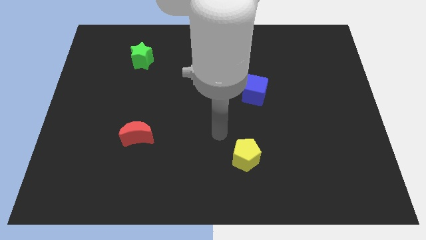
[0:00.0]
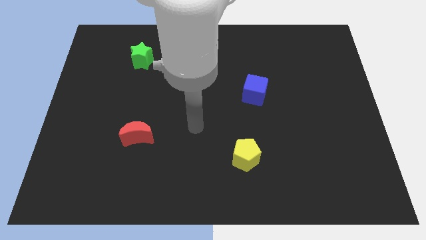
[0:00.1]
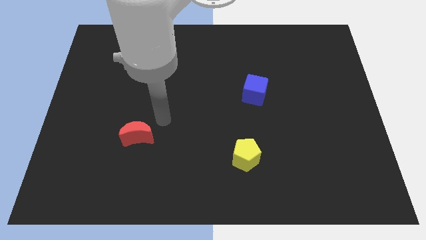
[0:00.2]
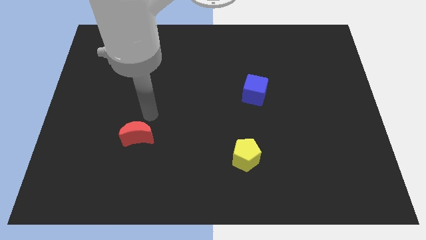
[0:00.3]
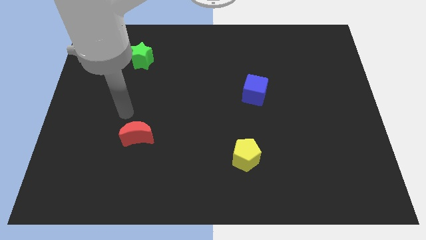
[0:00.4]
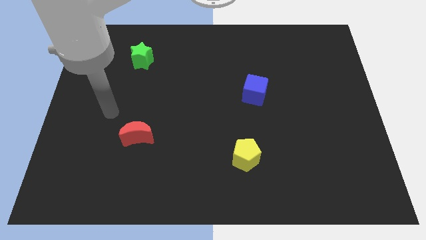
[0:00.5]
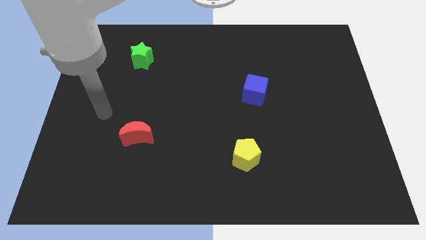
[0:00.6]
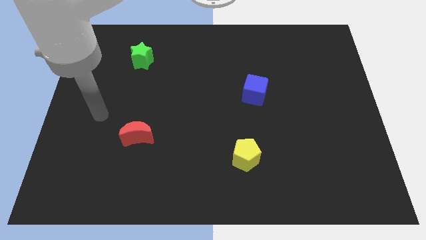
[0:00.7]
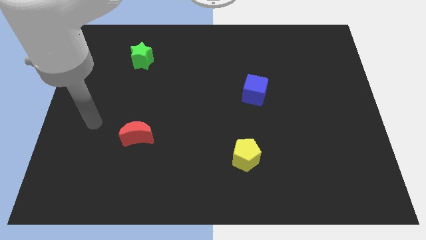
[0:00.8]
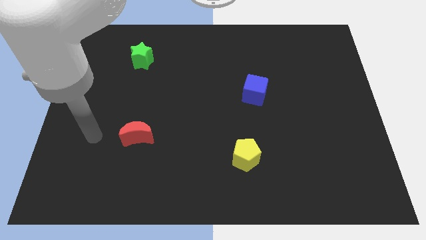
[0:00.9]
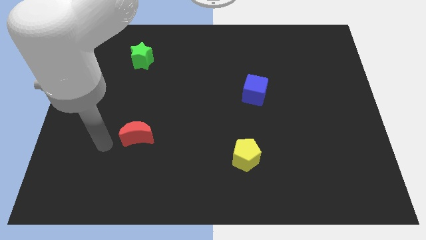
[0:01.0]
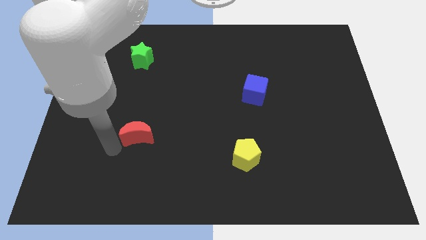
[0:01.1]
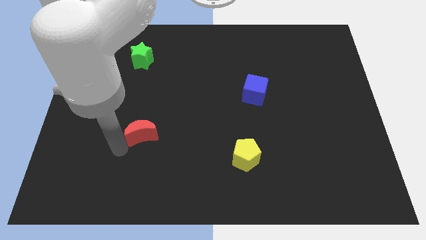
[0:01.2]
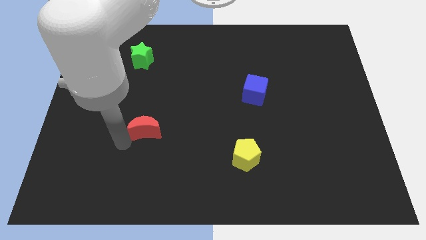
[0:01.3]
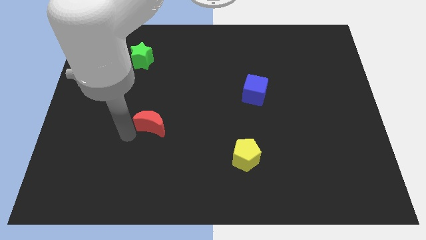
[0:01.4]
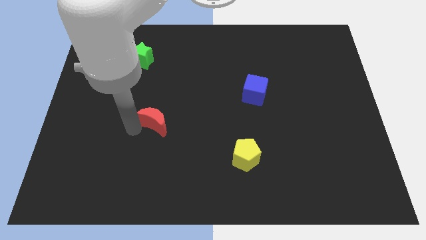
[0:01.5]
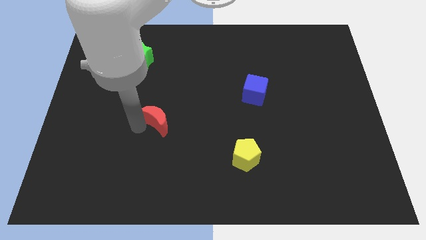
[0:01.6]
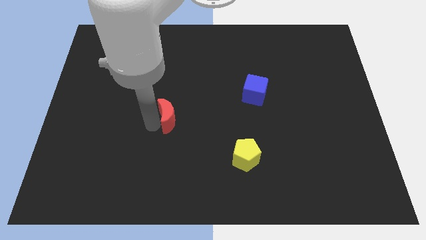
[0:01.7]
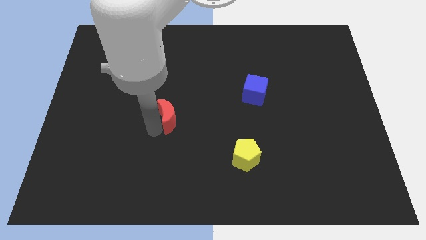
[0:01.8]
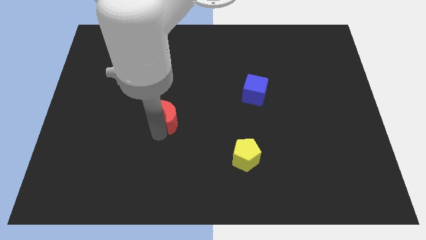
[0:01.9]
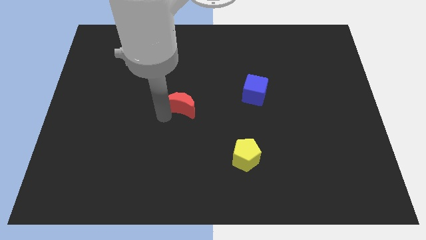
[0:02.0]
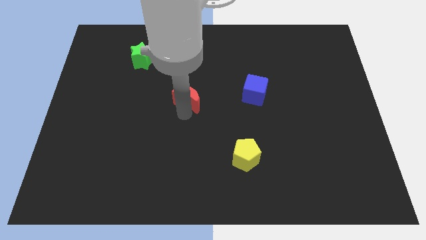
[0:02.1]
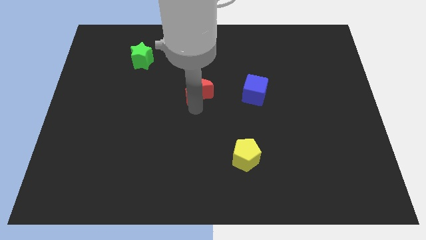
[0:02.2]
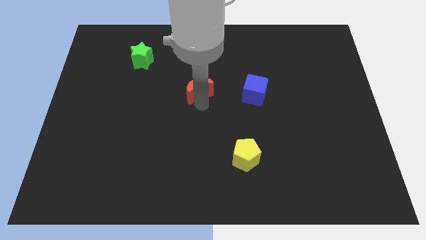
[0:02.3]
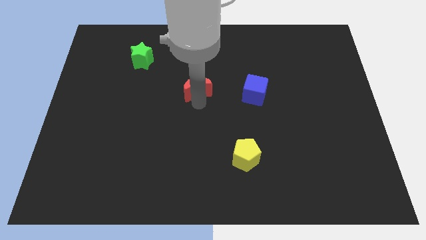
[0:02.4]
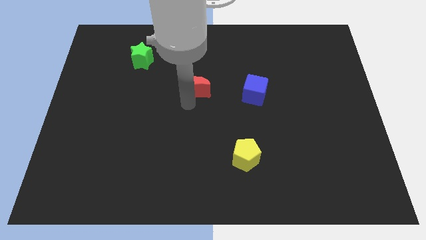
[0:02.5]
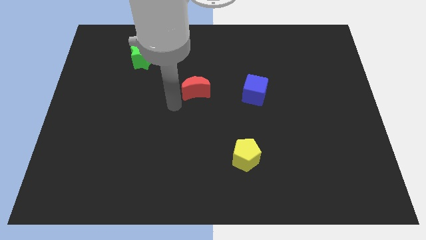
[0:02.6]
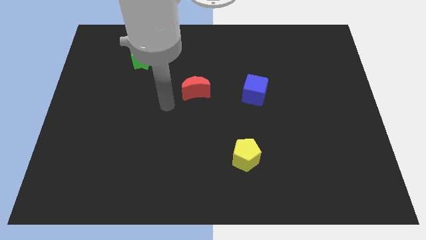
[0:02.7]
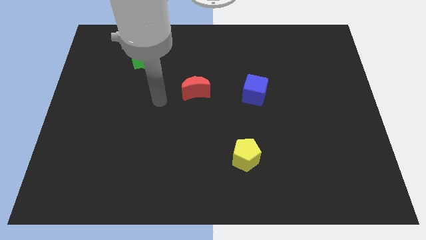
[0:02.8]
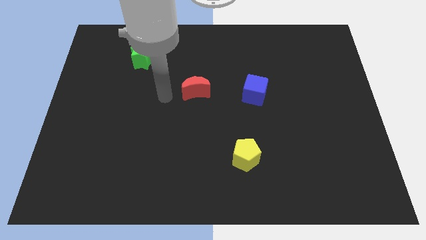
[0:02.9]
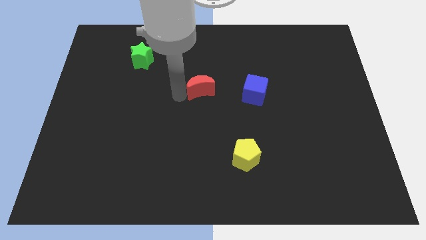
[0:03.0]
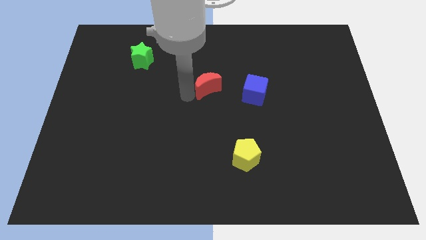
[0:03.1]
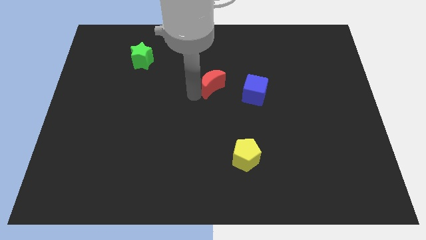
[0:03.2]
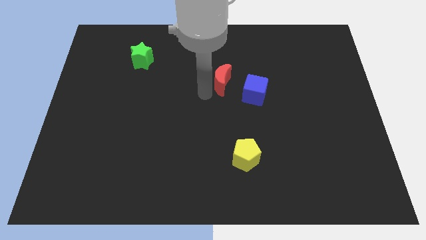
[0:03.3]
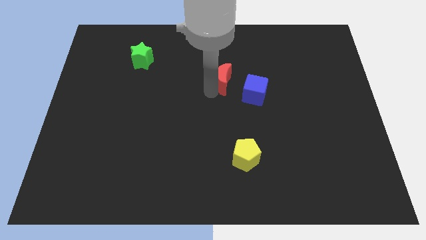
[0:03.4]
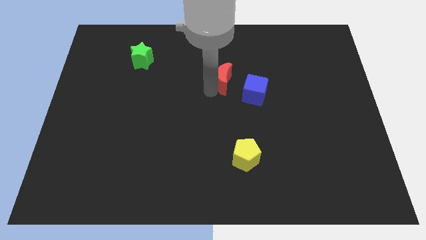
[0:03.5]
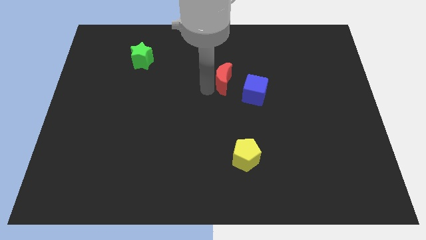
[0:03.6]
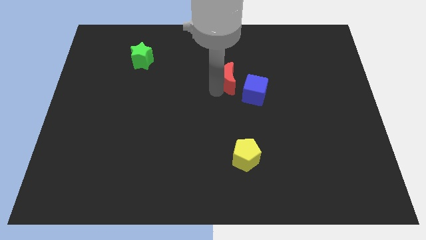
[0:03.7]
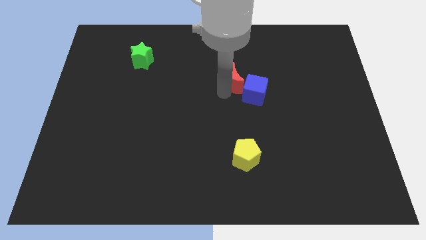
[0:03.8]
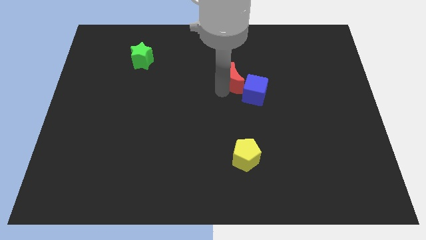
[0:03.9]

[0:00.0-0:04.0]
push the moon close to the blue block

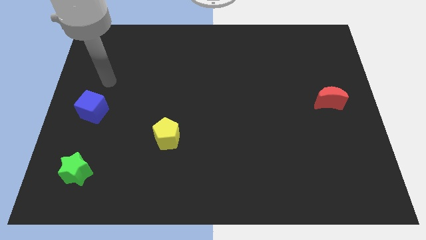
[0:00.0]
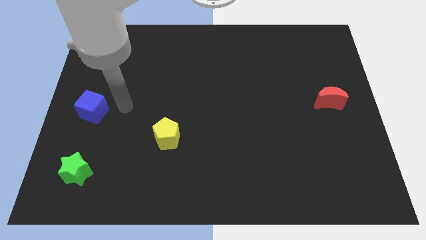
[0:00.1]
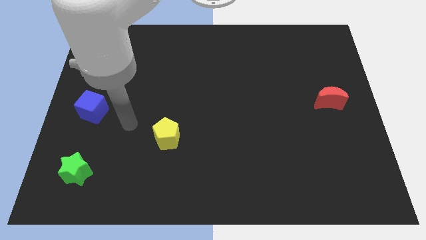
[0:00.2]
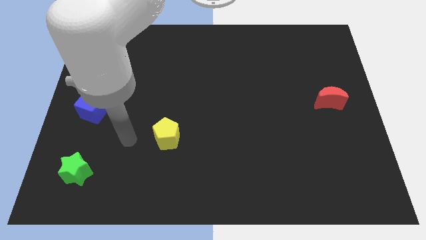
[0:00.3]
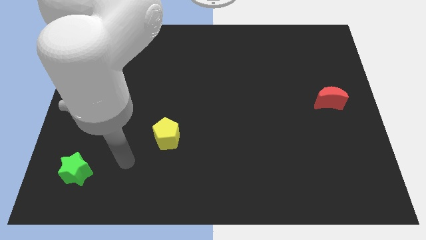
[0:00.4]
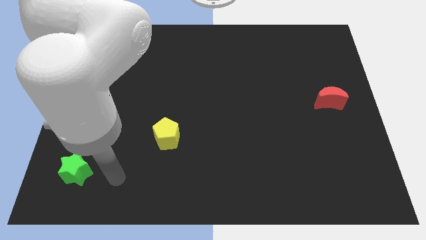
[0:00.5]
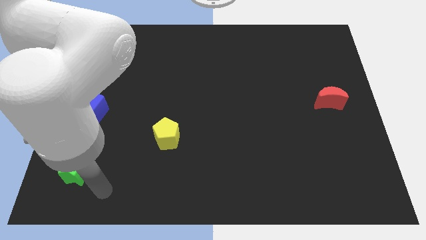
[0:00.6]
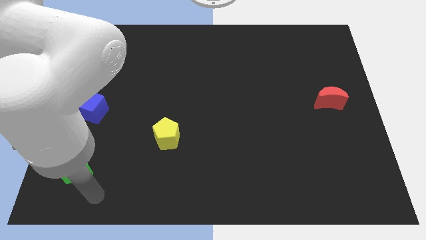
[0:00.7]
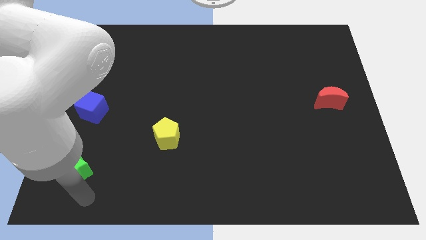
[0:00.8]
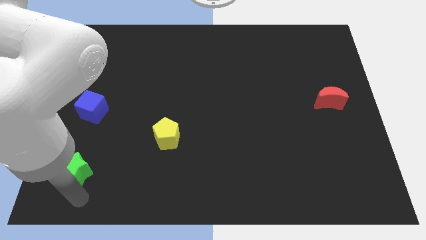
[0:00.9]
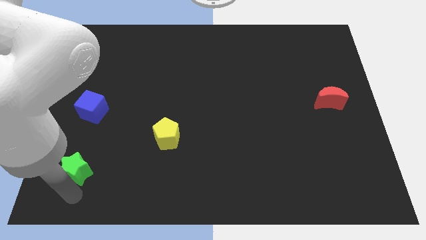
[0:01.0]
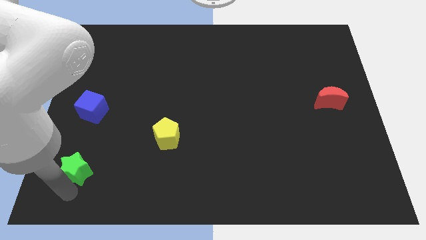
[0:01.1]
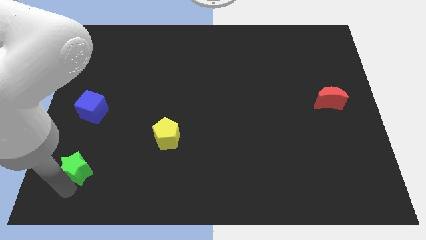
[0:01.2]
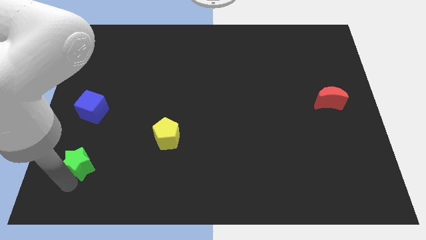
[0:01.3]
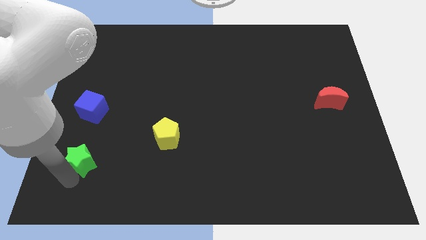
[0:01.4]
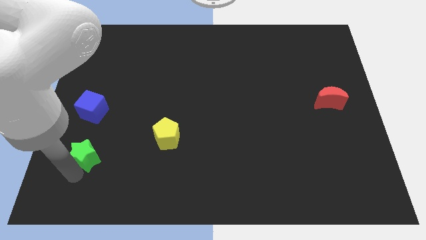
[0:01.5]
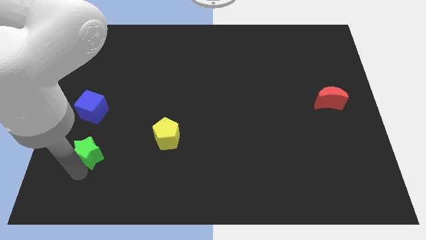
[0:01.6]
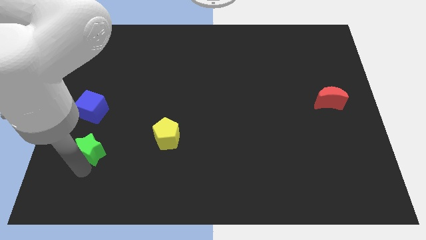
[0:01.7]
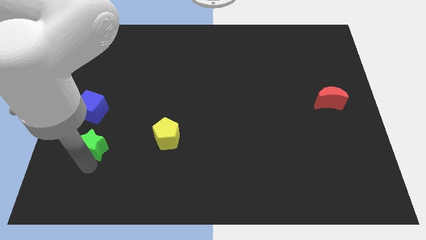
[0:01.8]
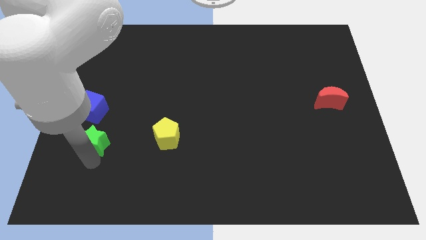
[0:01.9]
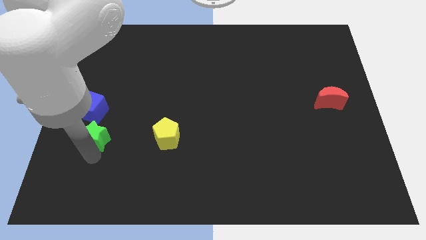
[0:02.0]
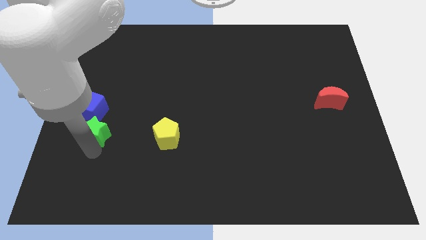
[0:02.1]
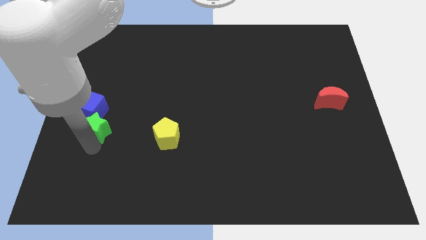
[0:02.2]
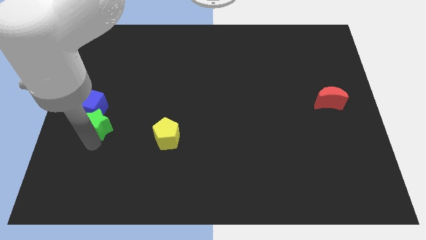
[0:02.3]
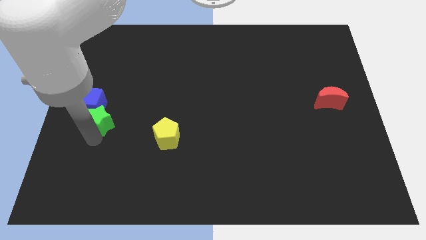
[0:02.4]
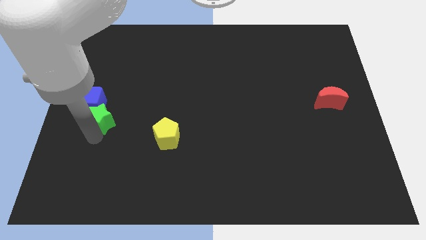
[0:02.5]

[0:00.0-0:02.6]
move the star next to the blue cube

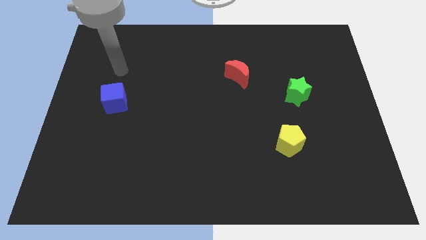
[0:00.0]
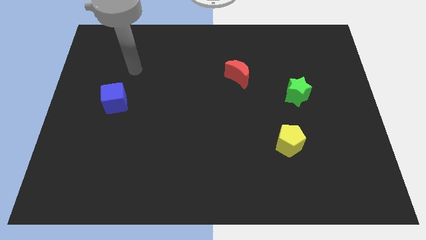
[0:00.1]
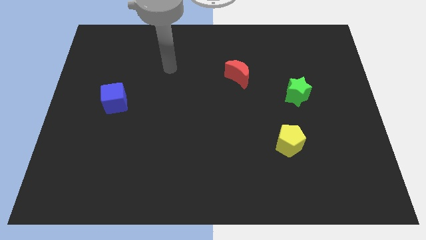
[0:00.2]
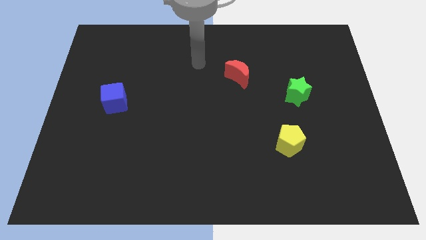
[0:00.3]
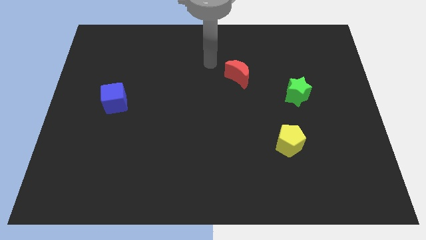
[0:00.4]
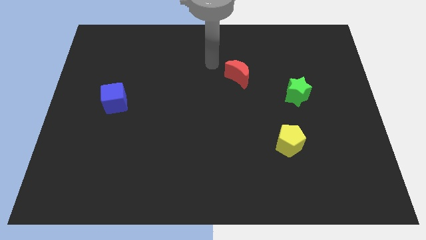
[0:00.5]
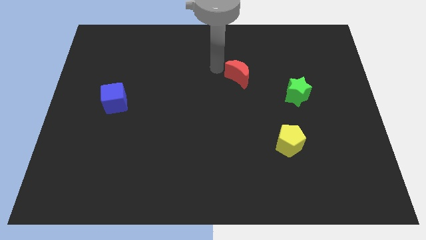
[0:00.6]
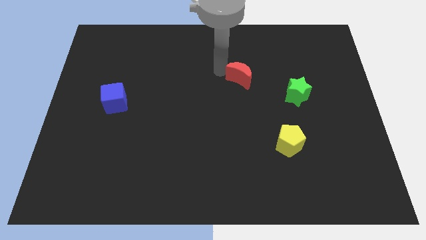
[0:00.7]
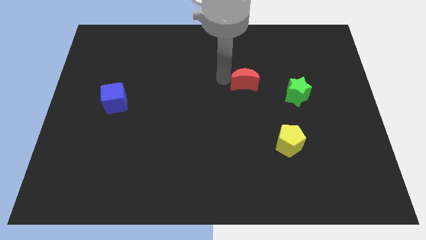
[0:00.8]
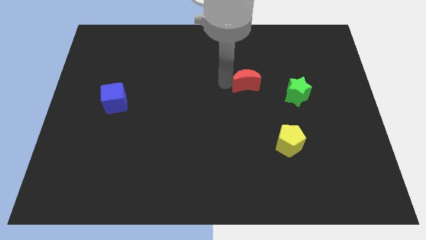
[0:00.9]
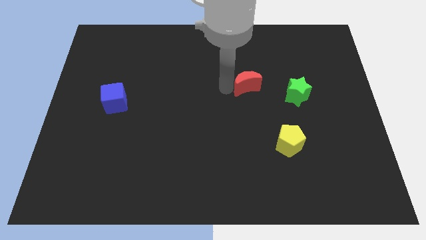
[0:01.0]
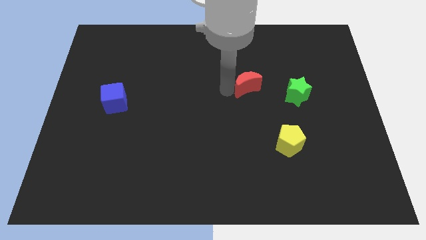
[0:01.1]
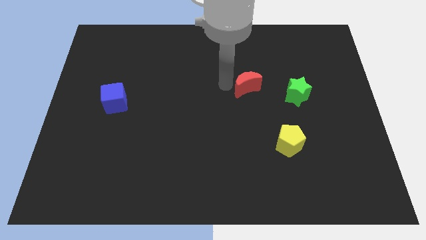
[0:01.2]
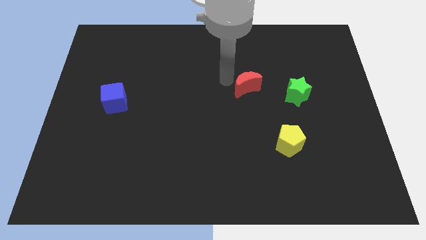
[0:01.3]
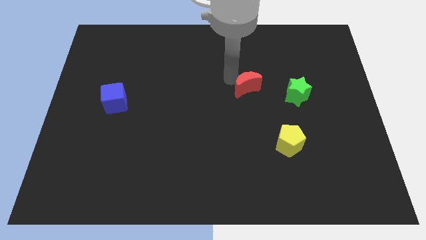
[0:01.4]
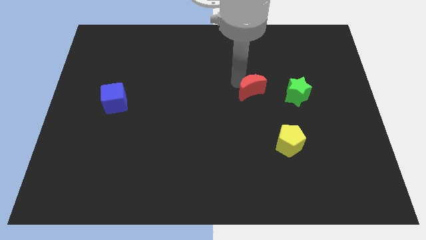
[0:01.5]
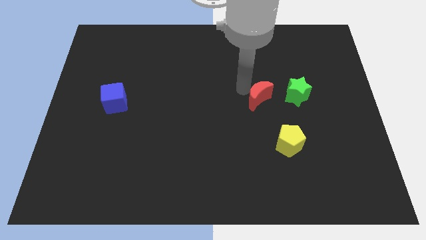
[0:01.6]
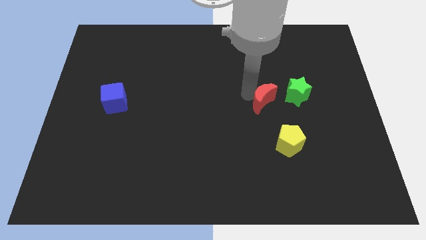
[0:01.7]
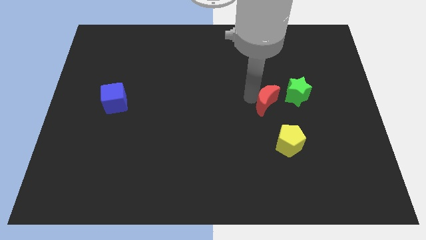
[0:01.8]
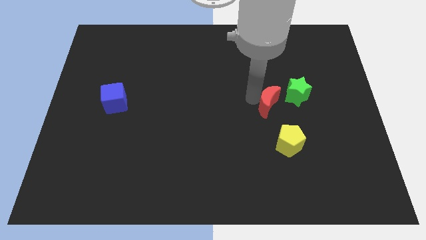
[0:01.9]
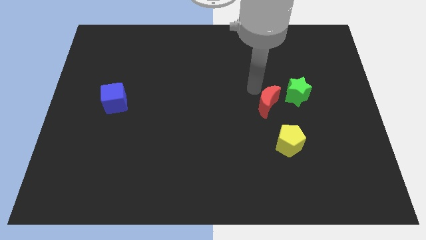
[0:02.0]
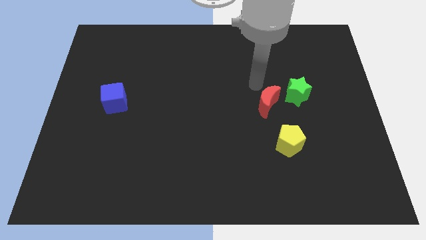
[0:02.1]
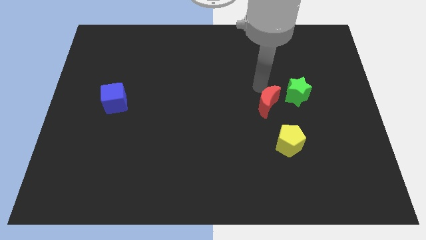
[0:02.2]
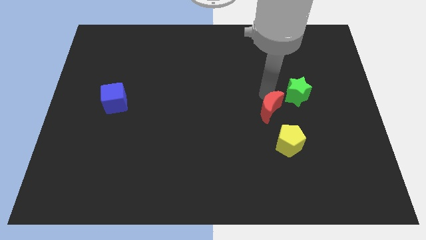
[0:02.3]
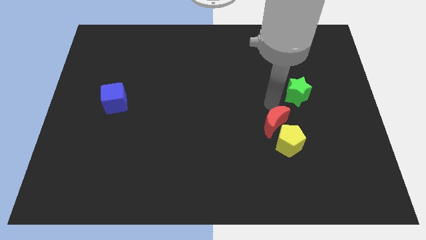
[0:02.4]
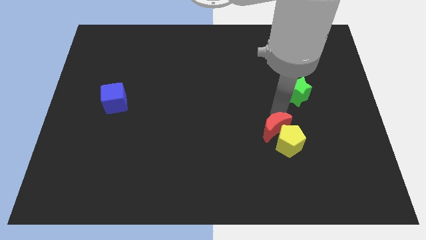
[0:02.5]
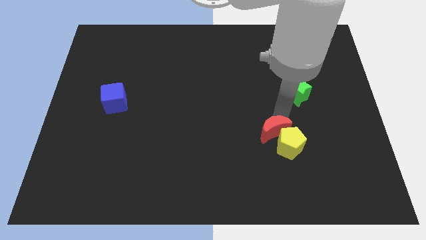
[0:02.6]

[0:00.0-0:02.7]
push the moon towards the yellow pentagon
